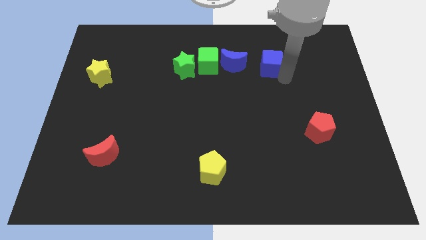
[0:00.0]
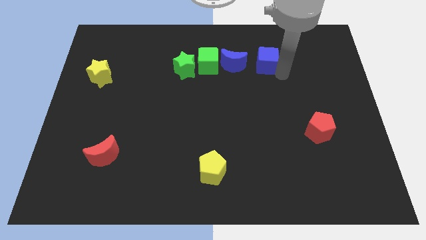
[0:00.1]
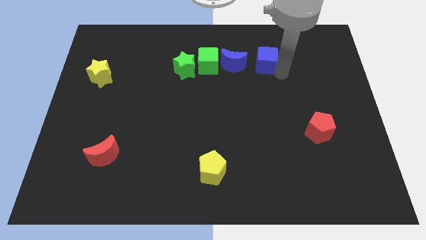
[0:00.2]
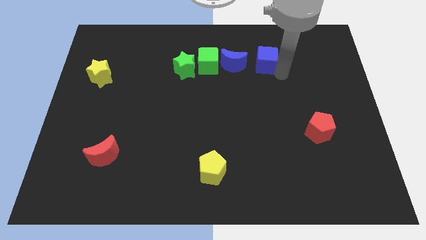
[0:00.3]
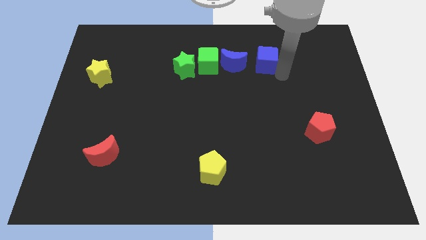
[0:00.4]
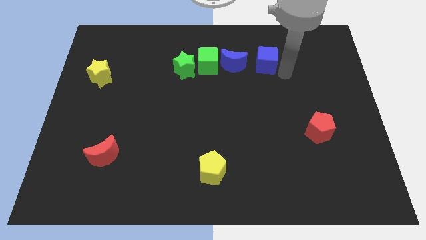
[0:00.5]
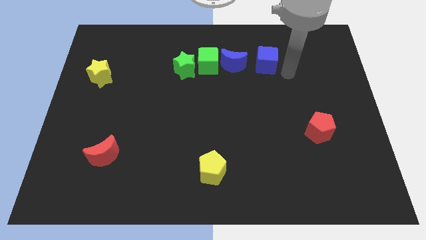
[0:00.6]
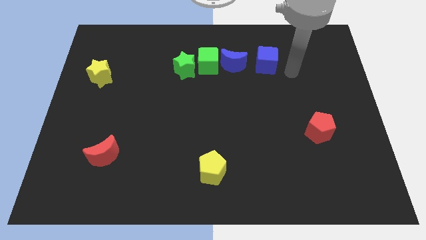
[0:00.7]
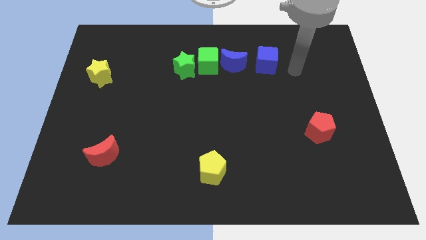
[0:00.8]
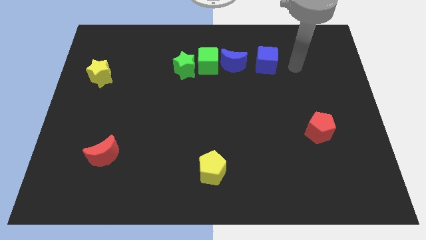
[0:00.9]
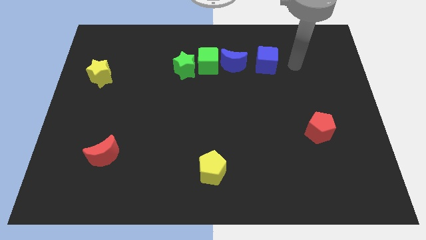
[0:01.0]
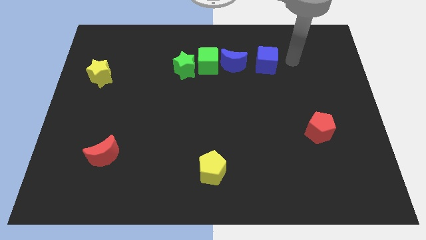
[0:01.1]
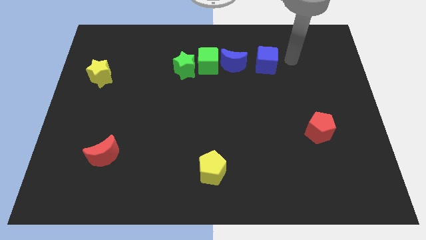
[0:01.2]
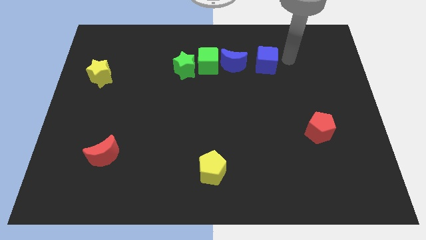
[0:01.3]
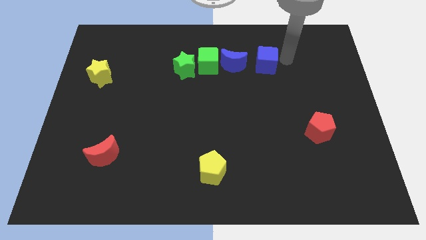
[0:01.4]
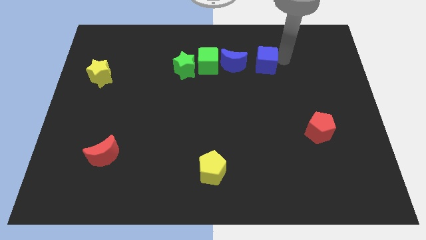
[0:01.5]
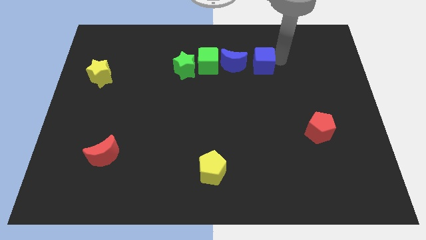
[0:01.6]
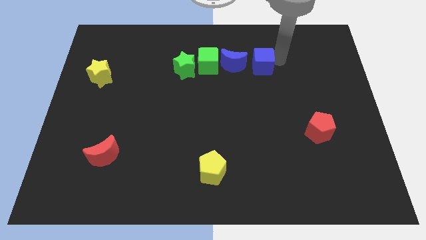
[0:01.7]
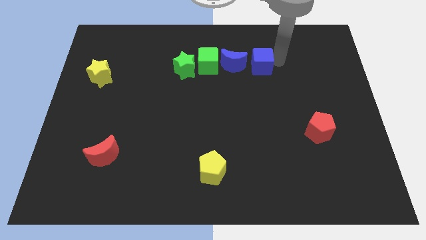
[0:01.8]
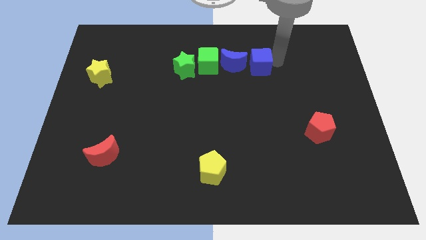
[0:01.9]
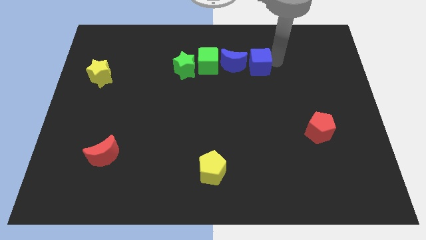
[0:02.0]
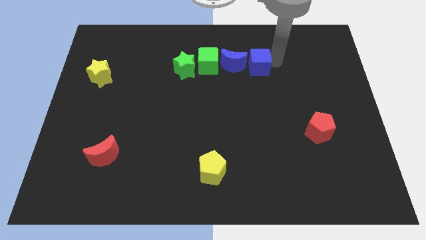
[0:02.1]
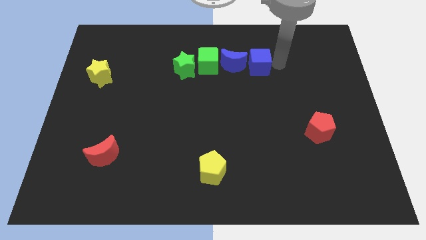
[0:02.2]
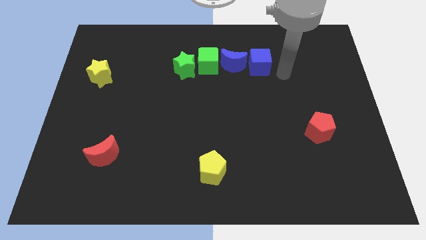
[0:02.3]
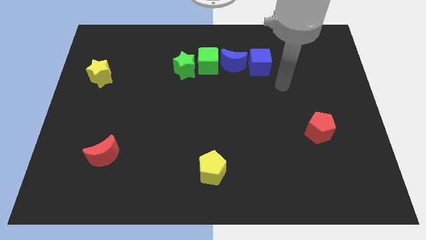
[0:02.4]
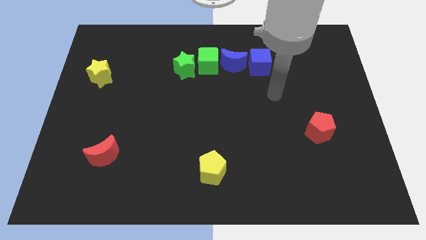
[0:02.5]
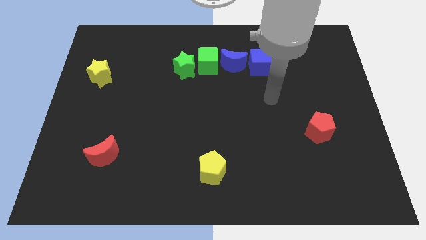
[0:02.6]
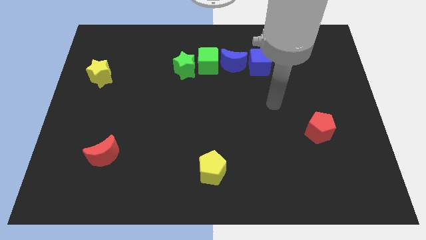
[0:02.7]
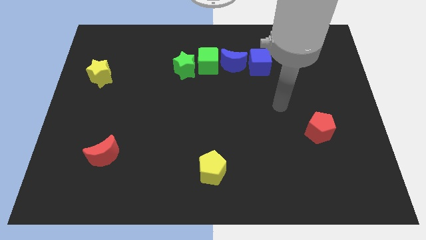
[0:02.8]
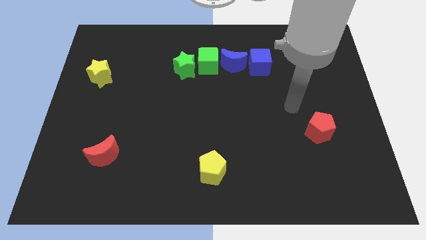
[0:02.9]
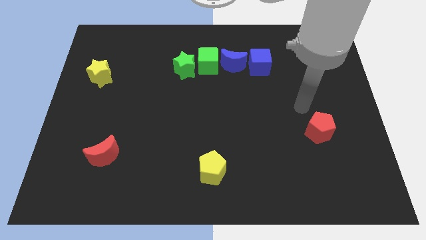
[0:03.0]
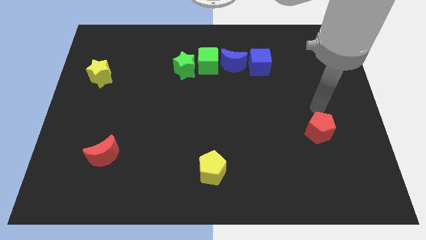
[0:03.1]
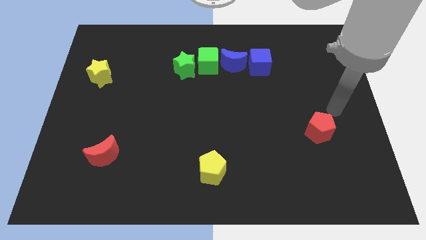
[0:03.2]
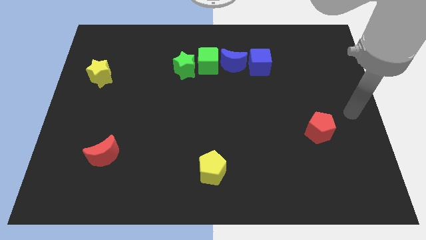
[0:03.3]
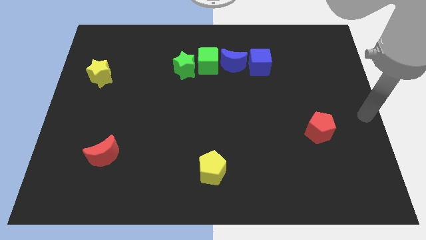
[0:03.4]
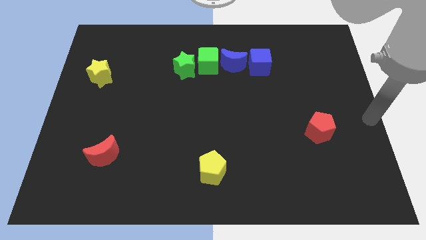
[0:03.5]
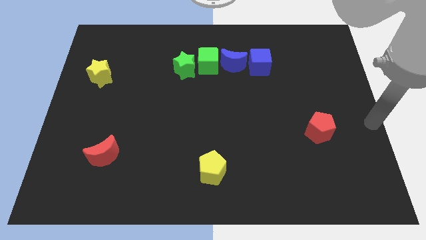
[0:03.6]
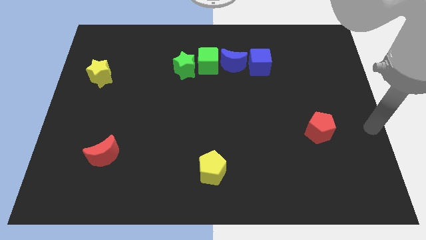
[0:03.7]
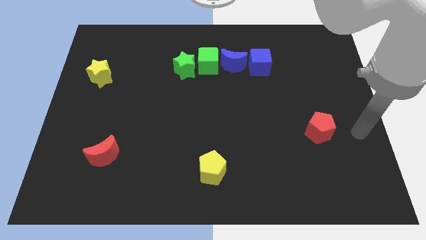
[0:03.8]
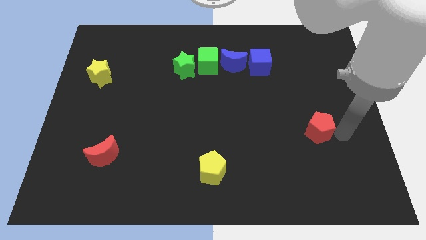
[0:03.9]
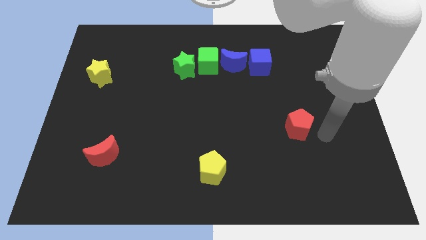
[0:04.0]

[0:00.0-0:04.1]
slide the blue cube close to the blue crescent

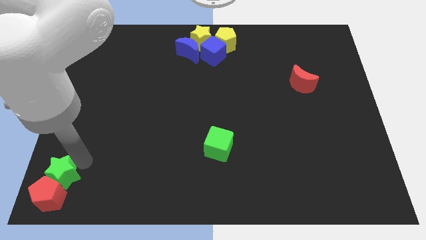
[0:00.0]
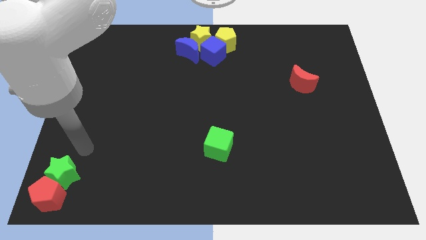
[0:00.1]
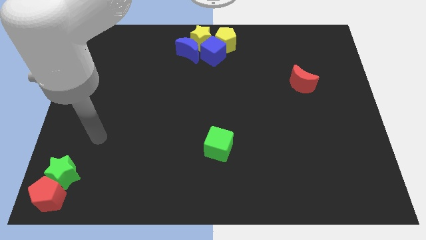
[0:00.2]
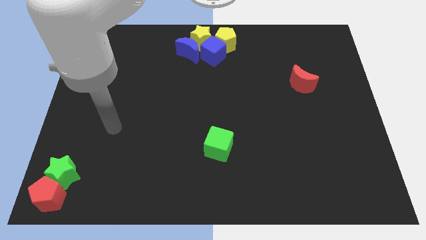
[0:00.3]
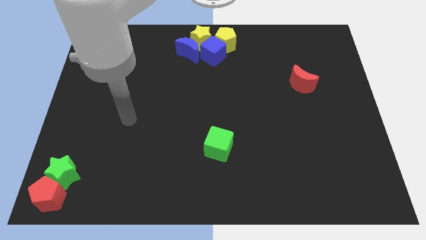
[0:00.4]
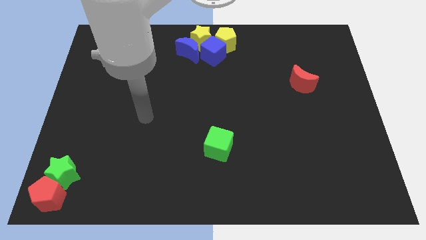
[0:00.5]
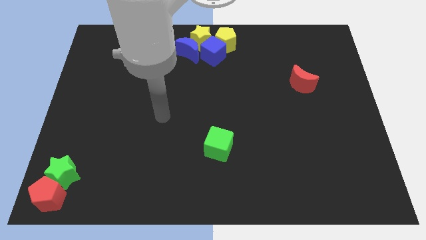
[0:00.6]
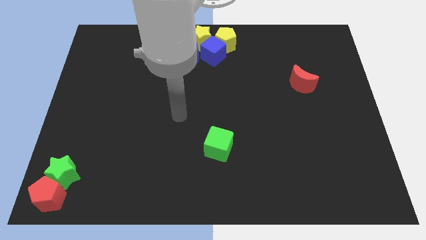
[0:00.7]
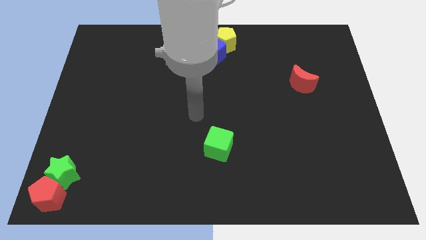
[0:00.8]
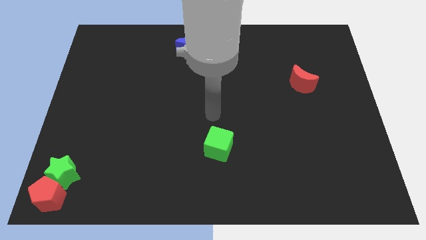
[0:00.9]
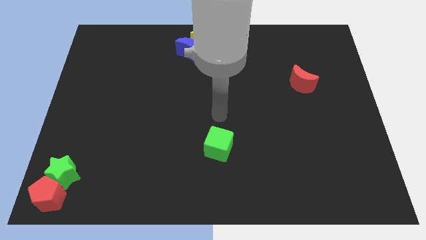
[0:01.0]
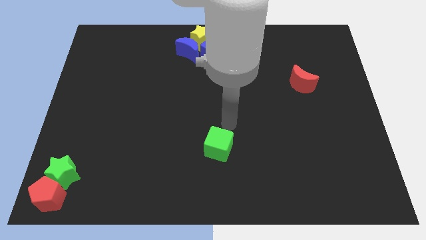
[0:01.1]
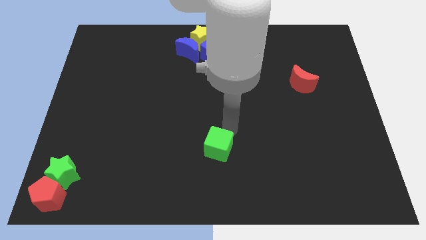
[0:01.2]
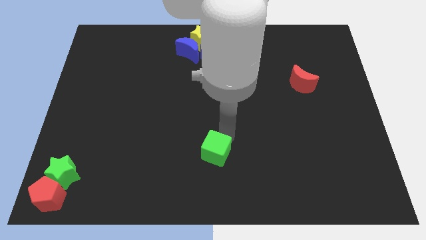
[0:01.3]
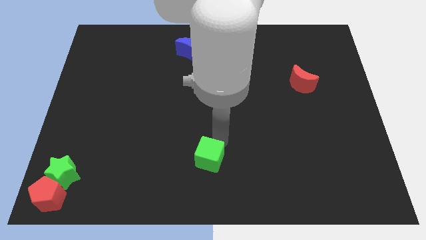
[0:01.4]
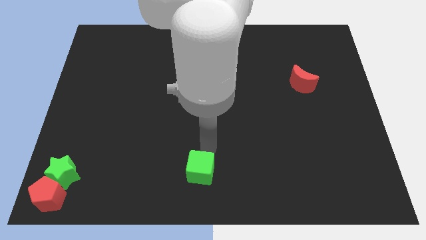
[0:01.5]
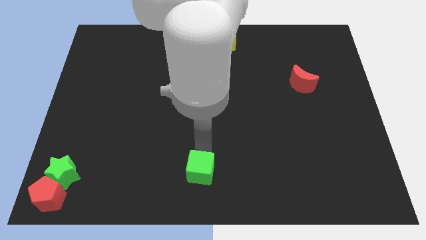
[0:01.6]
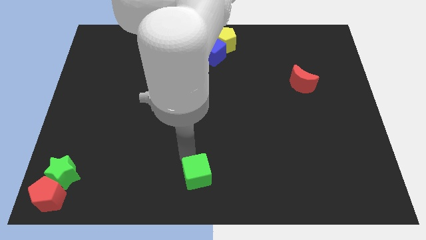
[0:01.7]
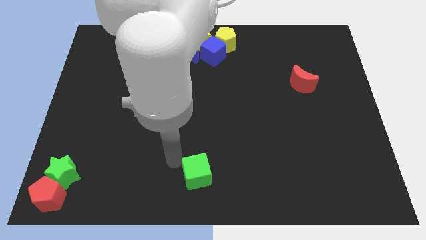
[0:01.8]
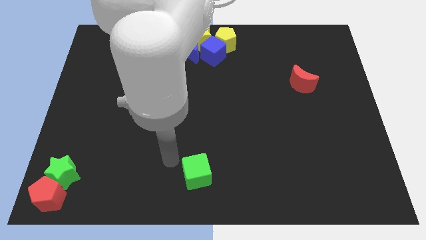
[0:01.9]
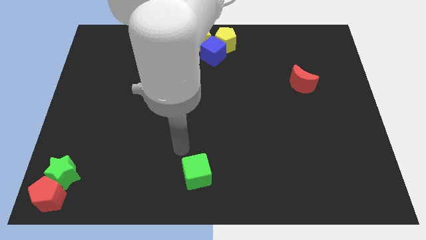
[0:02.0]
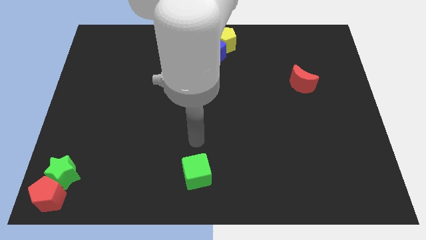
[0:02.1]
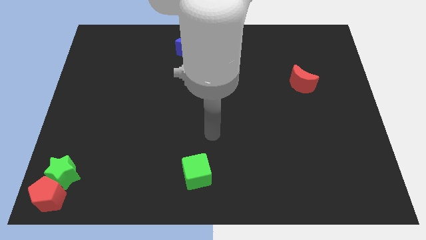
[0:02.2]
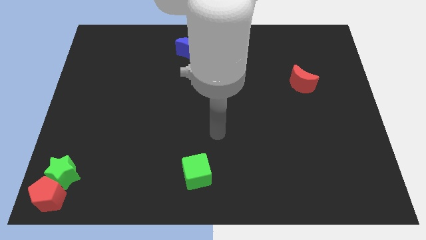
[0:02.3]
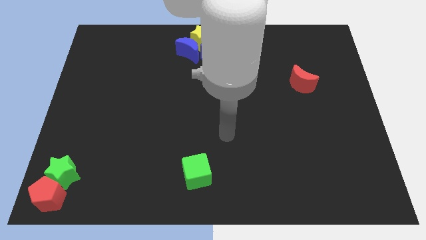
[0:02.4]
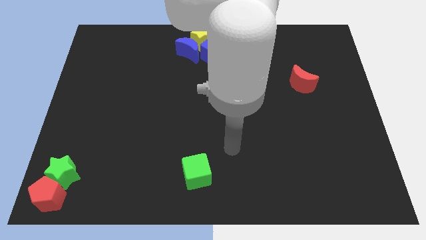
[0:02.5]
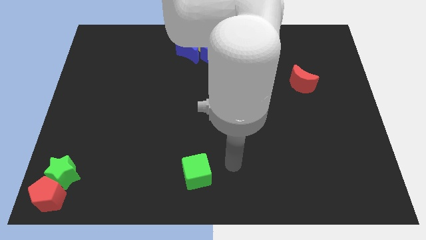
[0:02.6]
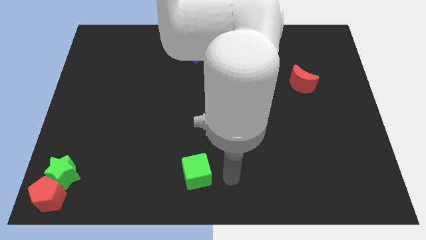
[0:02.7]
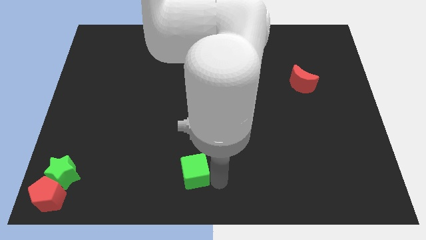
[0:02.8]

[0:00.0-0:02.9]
move the green cube slightly to the bottom center of the board

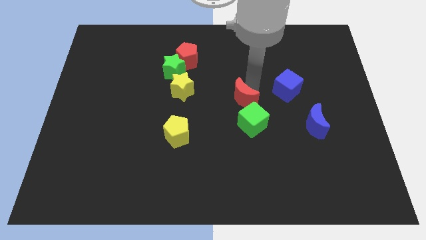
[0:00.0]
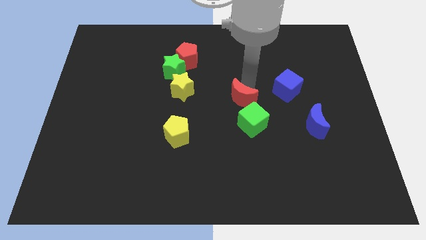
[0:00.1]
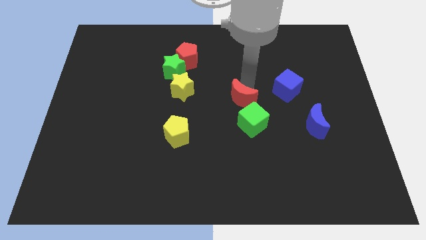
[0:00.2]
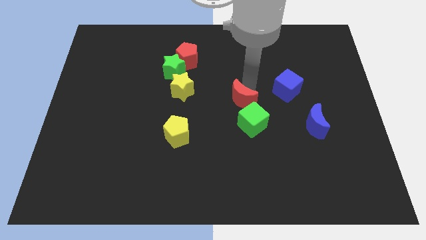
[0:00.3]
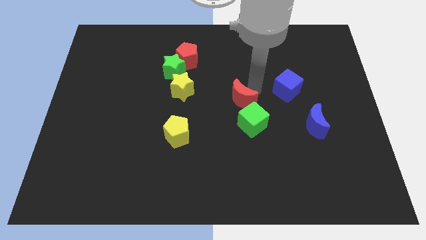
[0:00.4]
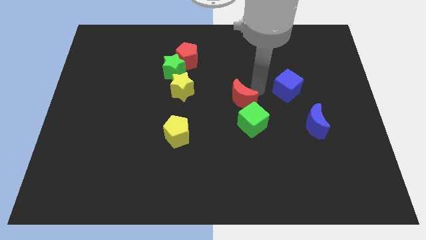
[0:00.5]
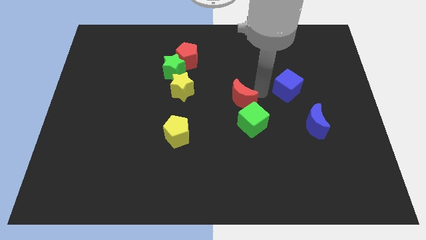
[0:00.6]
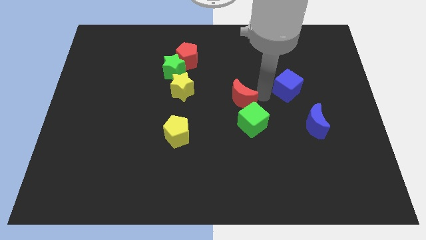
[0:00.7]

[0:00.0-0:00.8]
push the red crescent into the green cube

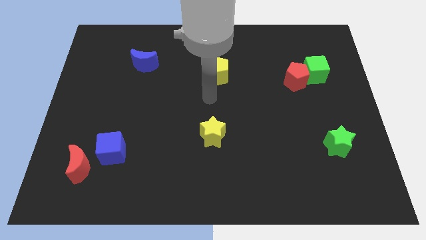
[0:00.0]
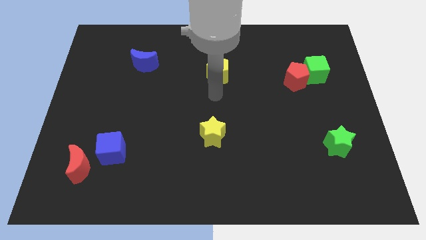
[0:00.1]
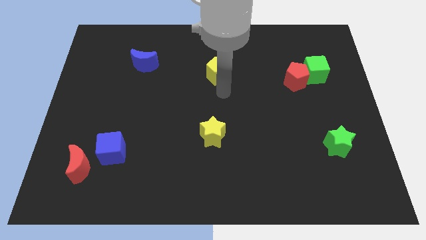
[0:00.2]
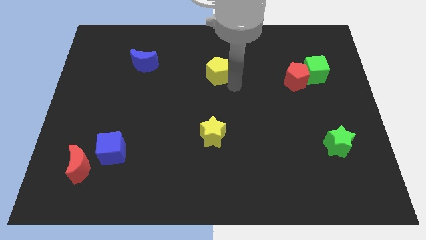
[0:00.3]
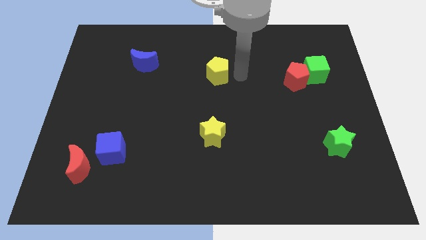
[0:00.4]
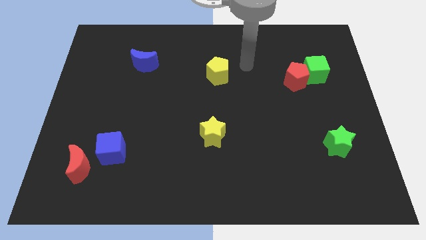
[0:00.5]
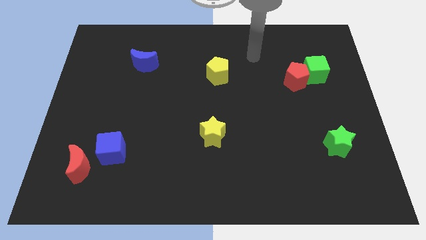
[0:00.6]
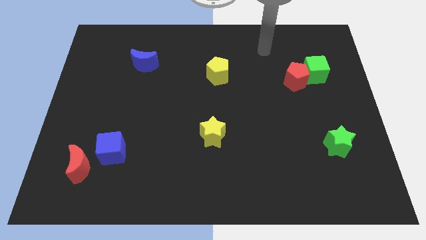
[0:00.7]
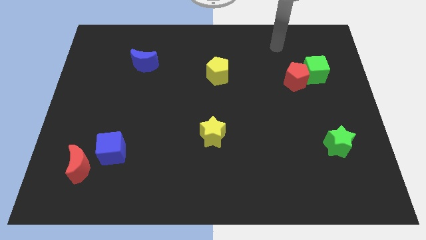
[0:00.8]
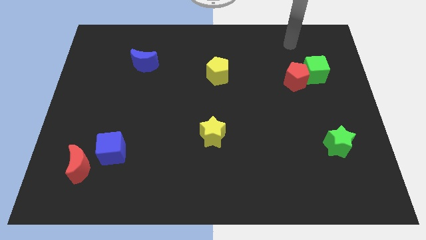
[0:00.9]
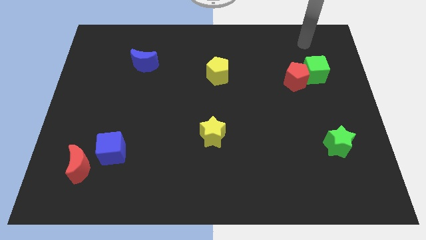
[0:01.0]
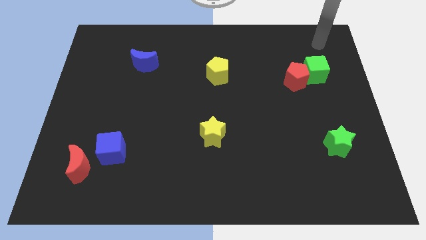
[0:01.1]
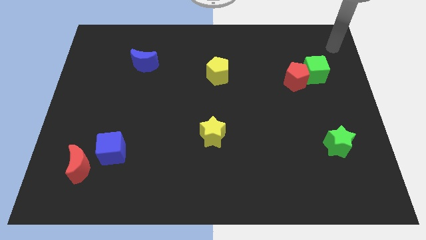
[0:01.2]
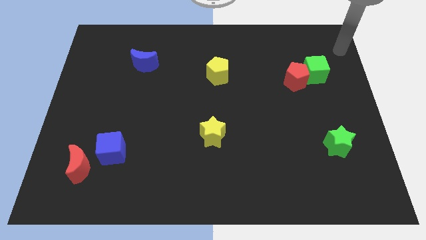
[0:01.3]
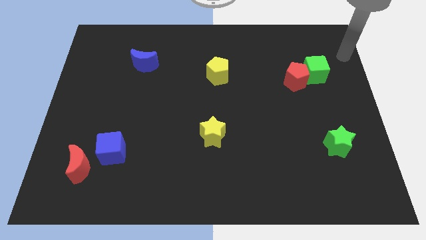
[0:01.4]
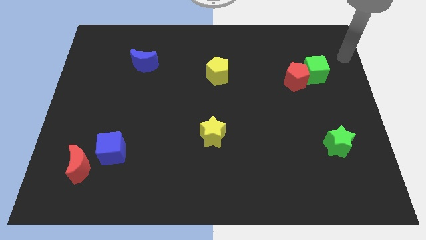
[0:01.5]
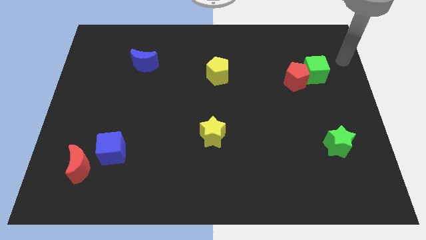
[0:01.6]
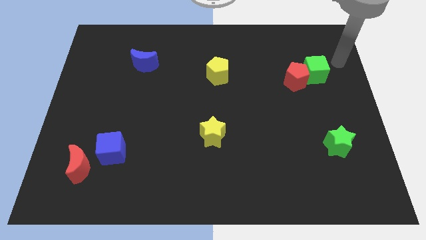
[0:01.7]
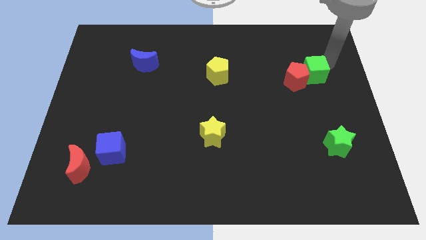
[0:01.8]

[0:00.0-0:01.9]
point your hand at the right side of the green cube
